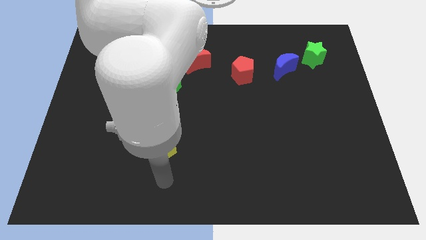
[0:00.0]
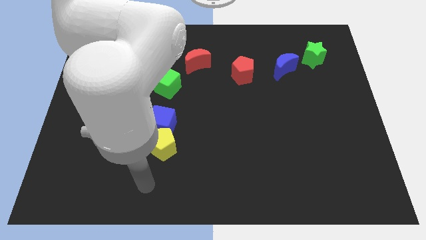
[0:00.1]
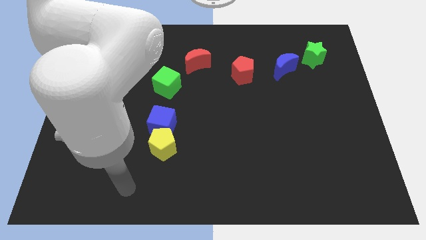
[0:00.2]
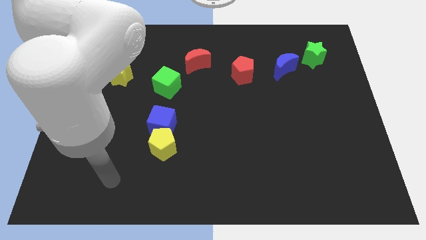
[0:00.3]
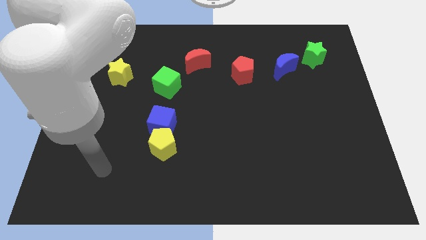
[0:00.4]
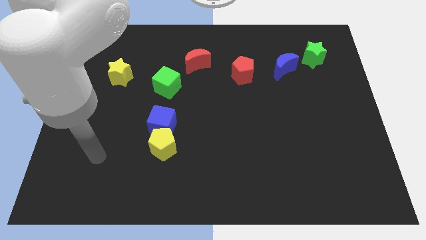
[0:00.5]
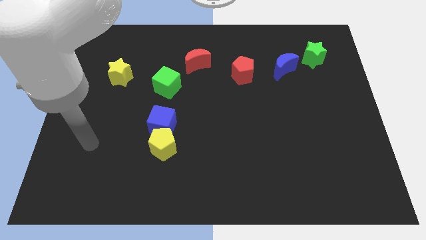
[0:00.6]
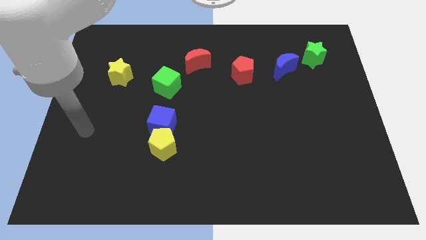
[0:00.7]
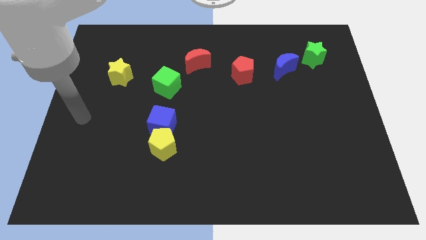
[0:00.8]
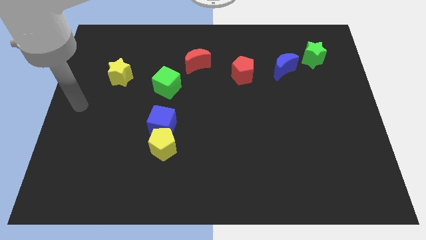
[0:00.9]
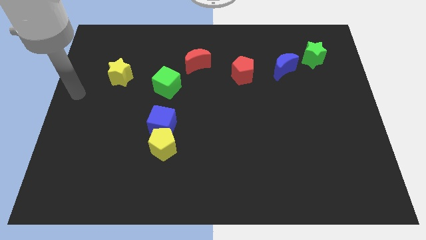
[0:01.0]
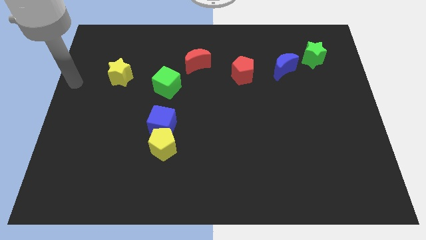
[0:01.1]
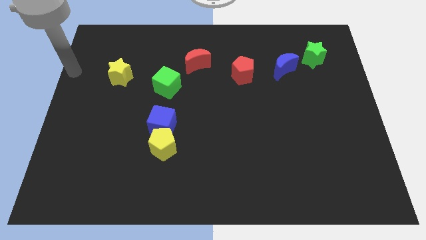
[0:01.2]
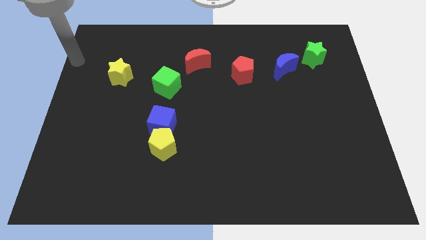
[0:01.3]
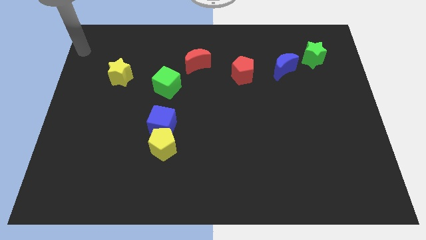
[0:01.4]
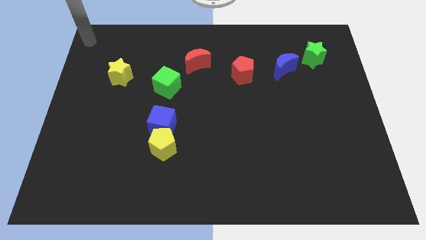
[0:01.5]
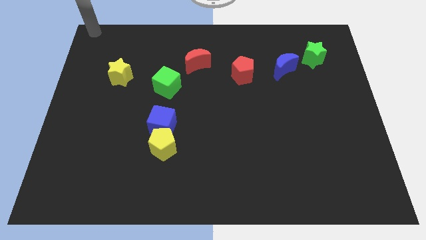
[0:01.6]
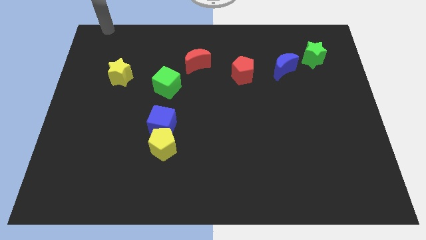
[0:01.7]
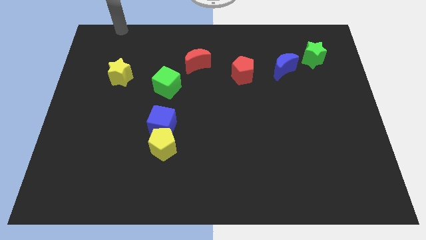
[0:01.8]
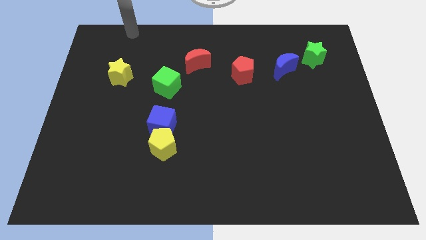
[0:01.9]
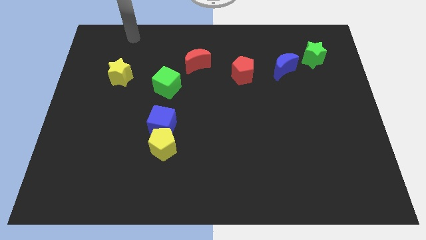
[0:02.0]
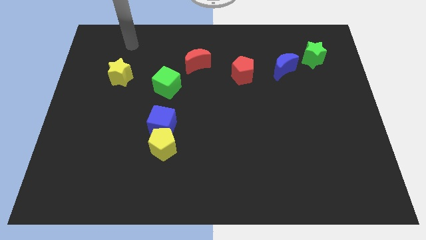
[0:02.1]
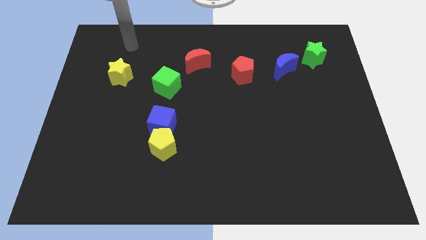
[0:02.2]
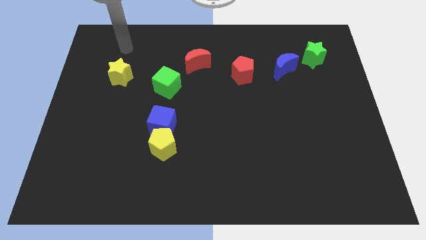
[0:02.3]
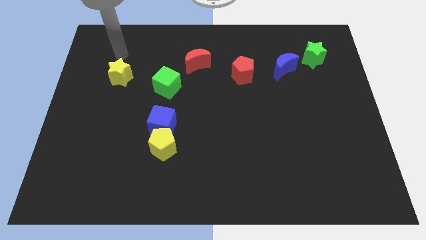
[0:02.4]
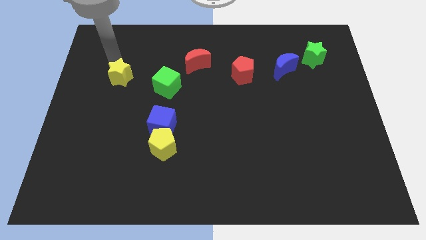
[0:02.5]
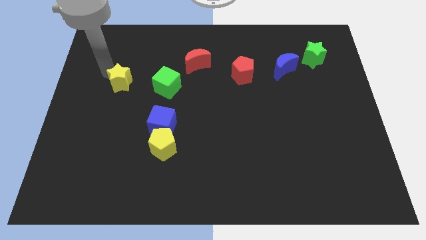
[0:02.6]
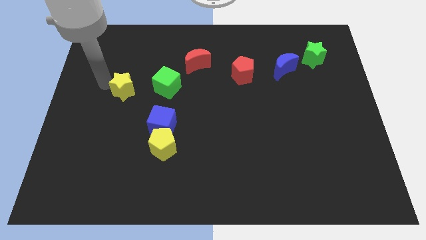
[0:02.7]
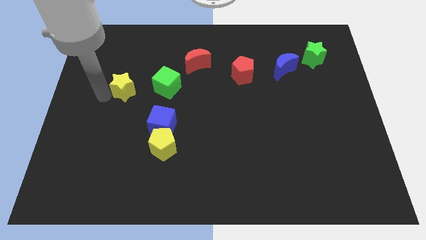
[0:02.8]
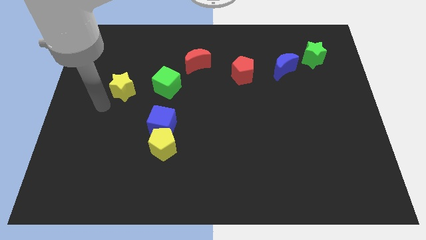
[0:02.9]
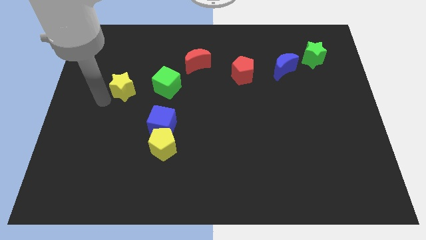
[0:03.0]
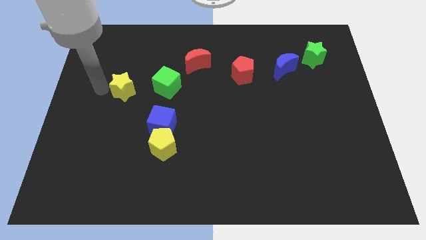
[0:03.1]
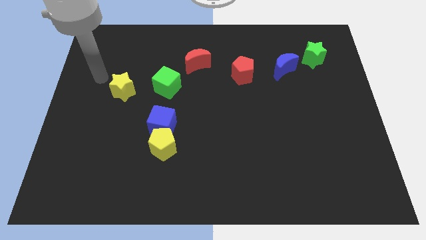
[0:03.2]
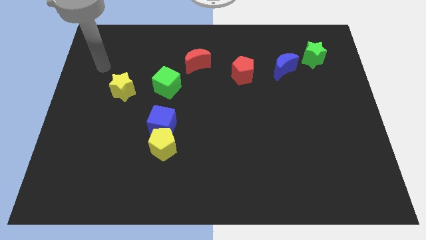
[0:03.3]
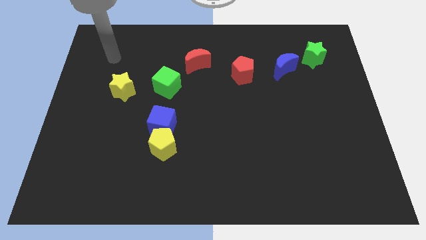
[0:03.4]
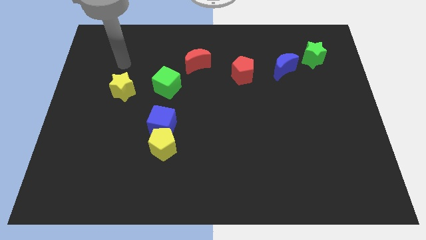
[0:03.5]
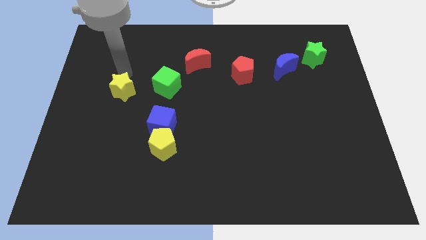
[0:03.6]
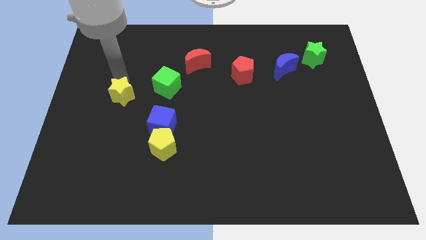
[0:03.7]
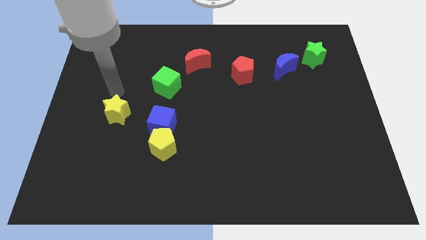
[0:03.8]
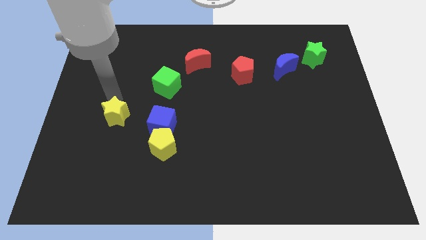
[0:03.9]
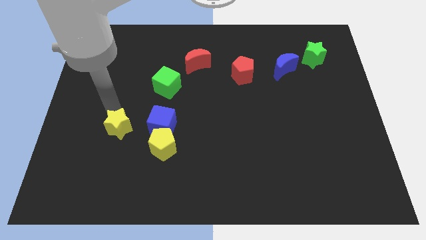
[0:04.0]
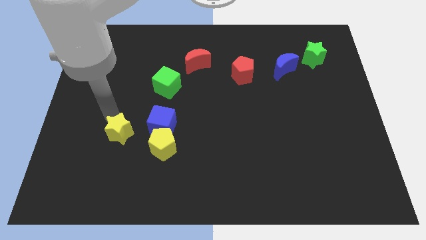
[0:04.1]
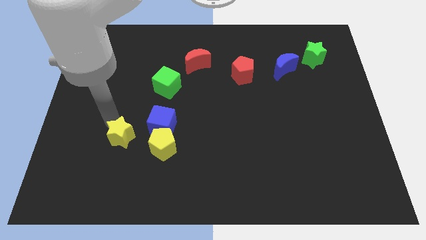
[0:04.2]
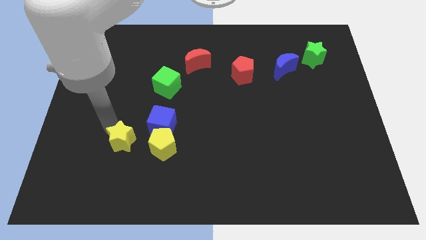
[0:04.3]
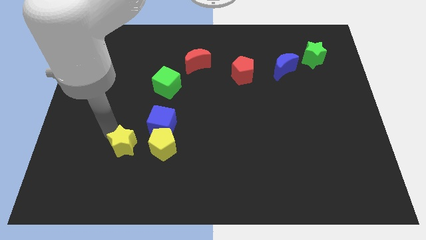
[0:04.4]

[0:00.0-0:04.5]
place the yellow star horizontally to the left side of the yellow pentagon

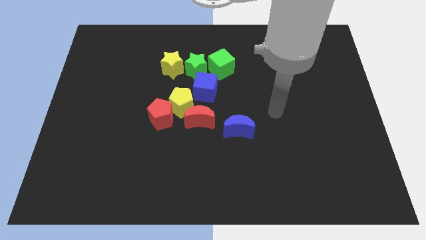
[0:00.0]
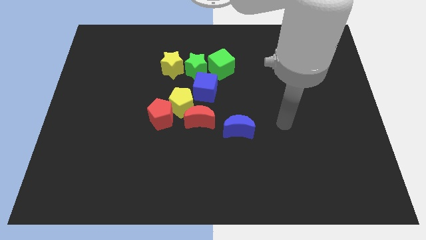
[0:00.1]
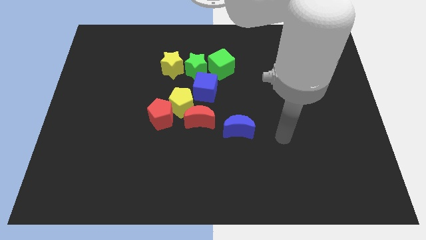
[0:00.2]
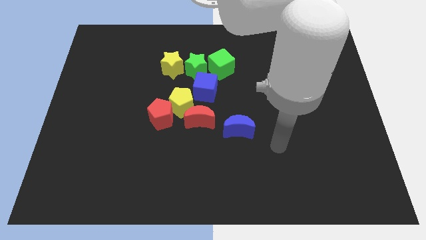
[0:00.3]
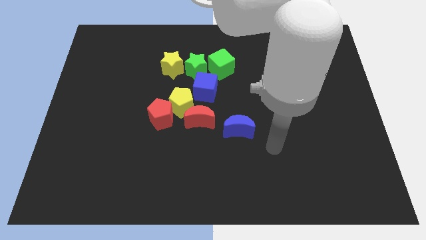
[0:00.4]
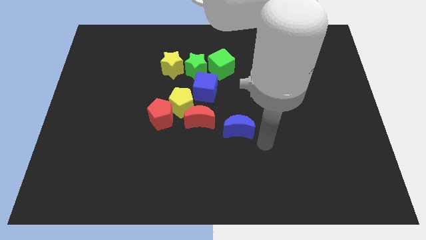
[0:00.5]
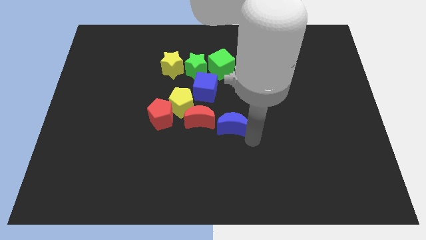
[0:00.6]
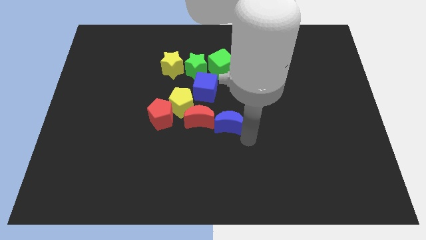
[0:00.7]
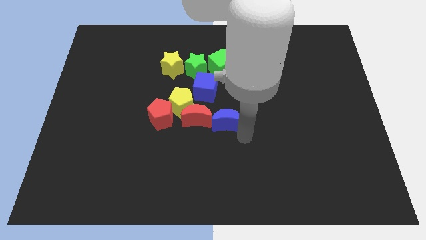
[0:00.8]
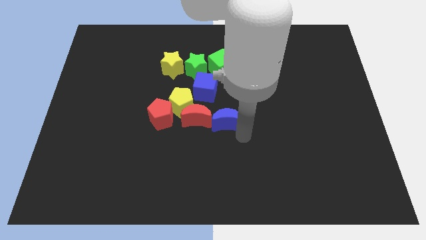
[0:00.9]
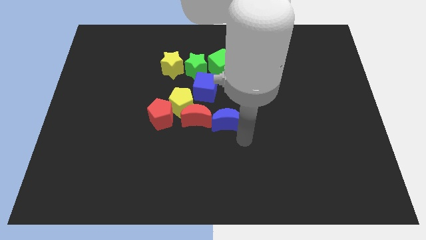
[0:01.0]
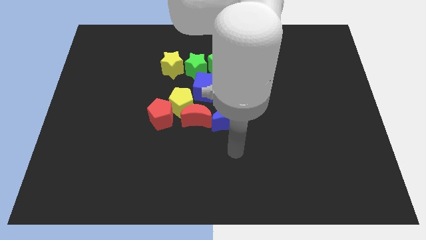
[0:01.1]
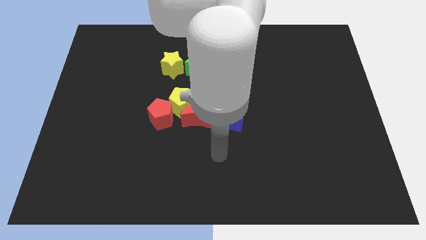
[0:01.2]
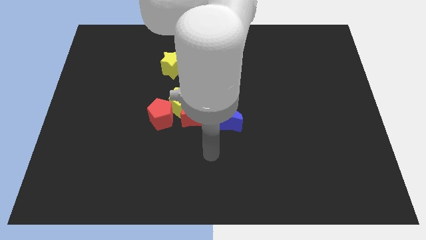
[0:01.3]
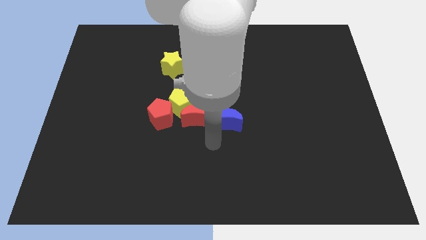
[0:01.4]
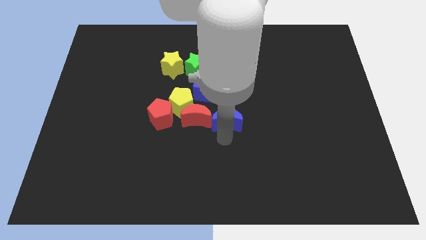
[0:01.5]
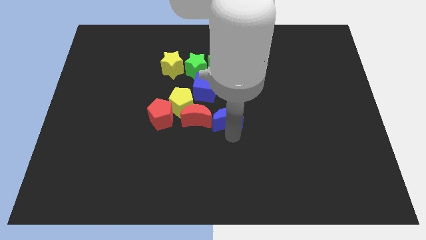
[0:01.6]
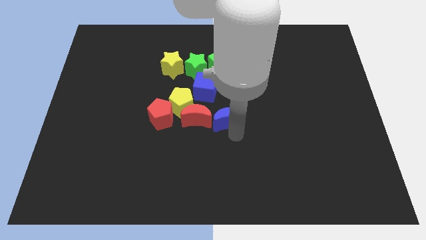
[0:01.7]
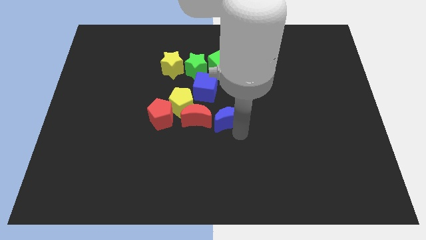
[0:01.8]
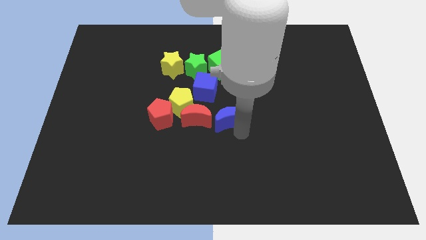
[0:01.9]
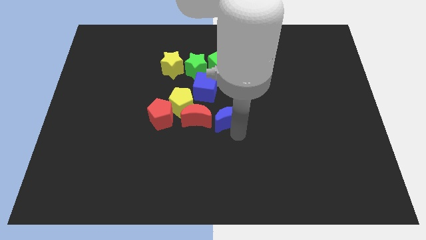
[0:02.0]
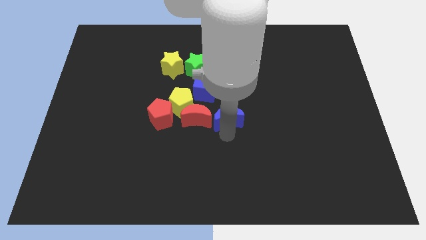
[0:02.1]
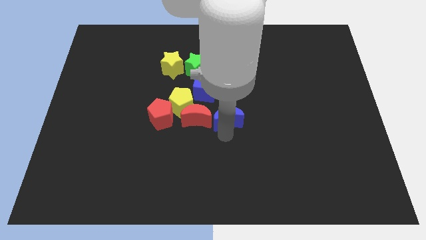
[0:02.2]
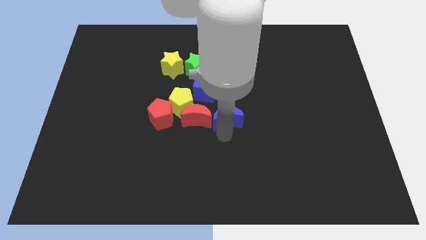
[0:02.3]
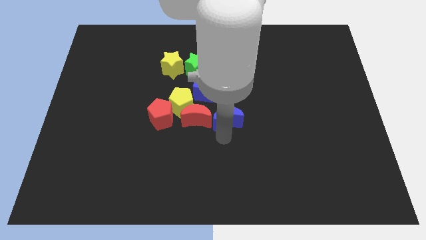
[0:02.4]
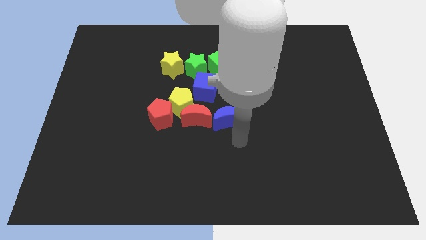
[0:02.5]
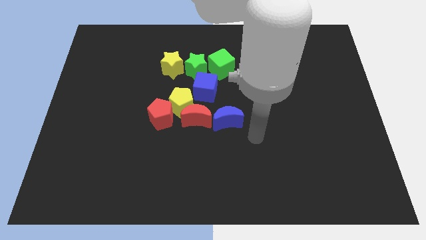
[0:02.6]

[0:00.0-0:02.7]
push the blue crescent into the red crescent

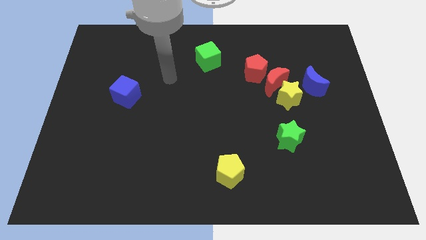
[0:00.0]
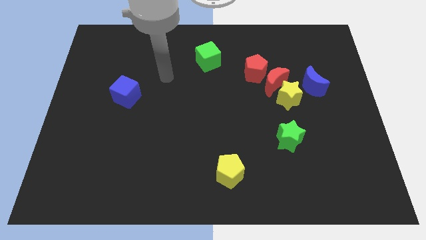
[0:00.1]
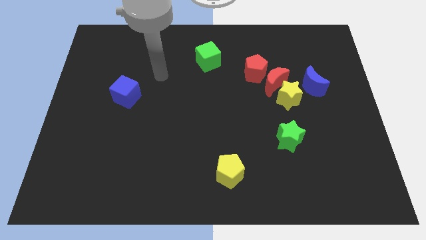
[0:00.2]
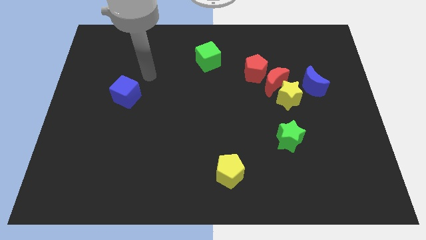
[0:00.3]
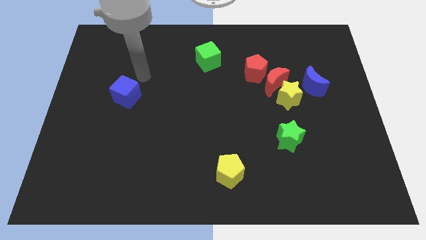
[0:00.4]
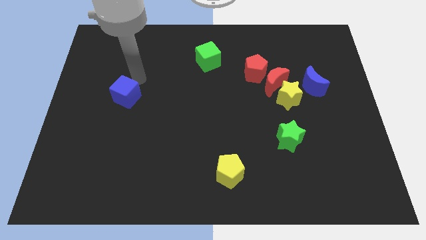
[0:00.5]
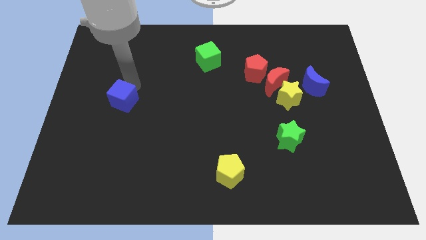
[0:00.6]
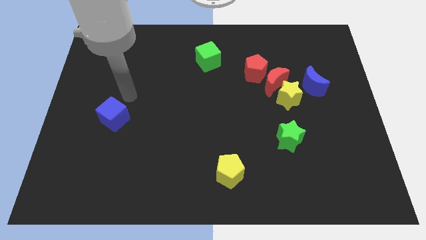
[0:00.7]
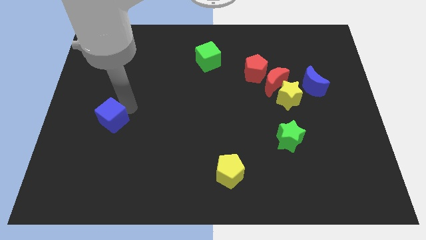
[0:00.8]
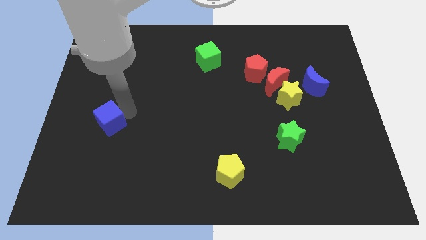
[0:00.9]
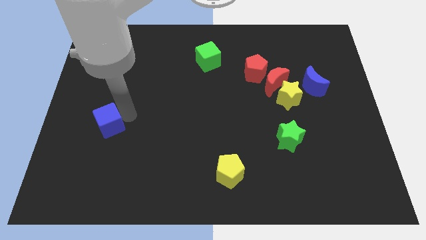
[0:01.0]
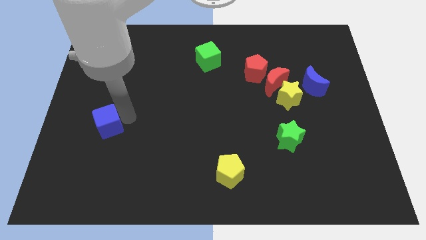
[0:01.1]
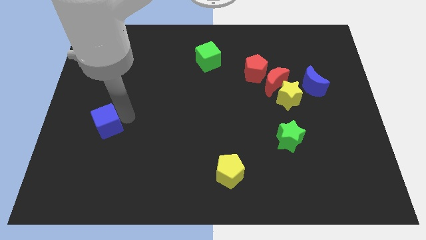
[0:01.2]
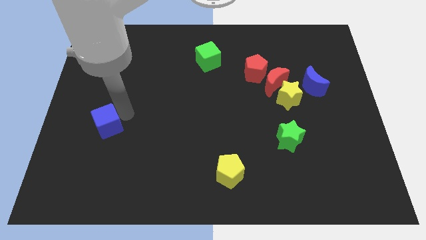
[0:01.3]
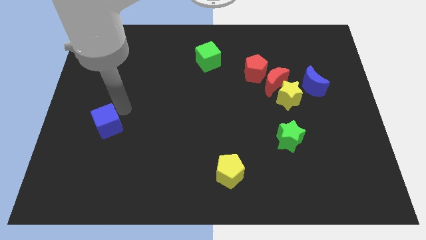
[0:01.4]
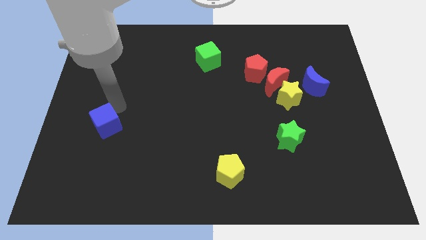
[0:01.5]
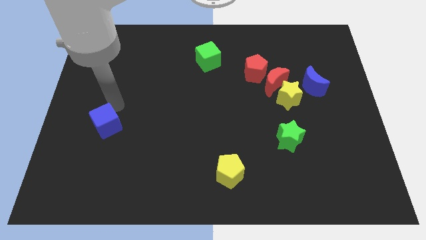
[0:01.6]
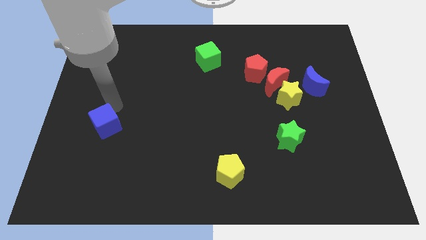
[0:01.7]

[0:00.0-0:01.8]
push the blue cube to the left center of the board
